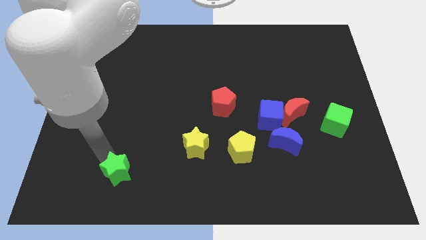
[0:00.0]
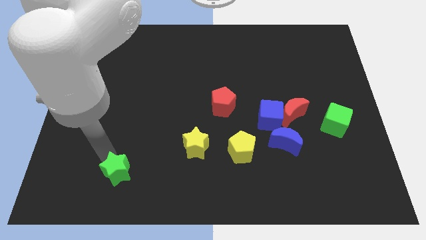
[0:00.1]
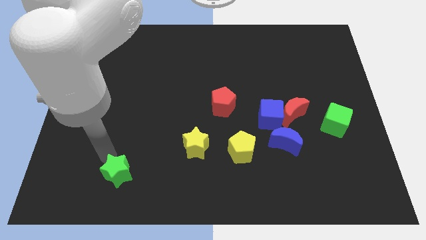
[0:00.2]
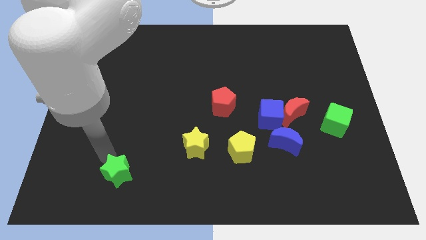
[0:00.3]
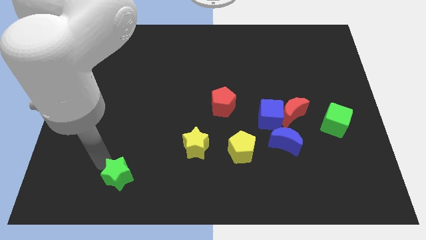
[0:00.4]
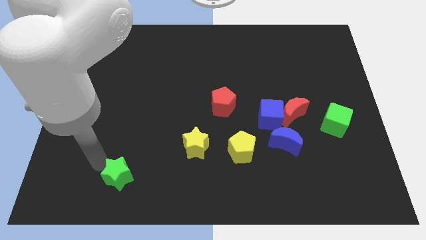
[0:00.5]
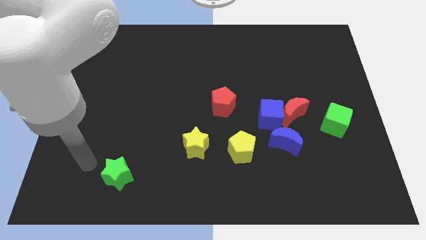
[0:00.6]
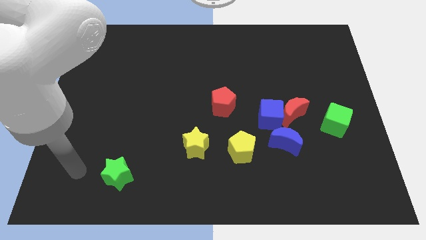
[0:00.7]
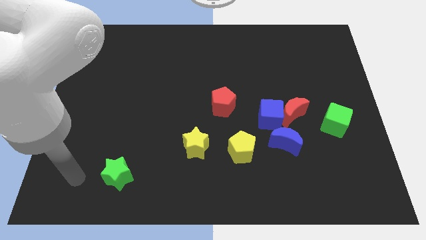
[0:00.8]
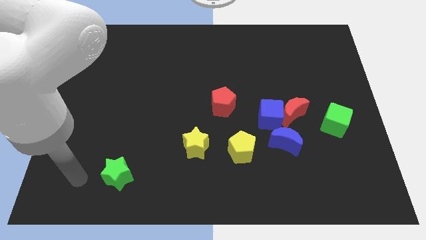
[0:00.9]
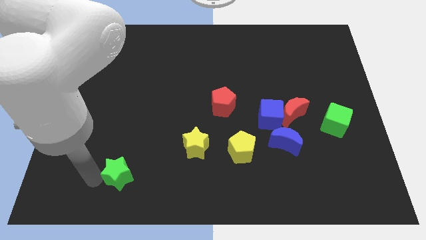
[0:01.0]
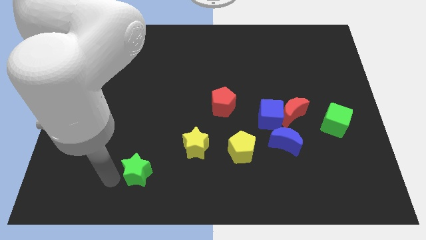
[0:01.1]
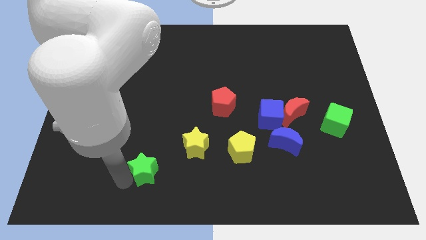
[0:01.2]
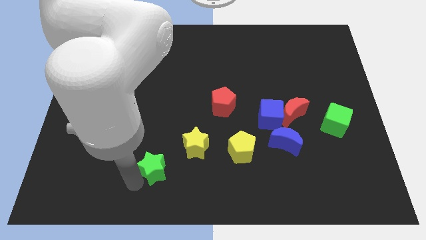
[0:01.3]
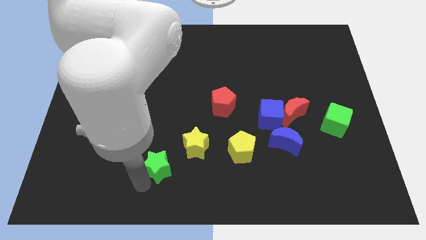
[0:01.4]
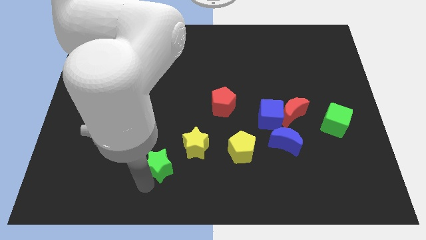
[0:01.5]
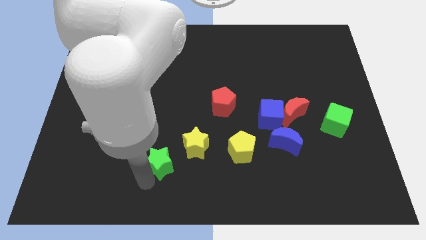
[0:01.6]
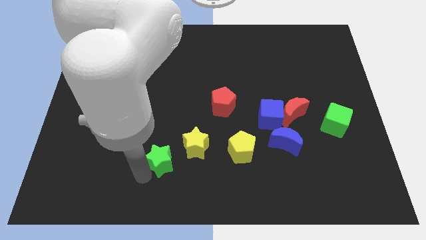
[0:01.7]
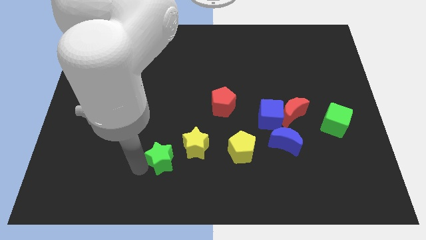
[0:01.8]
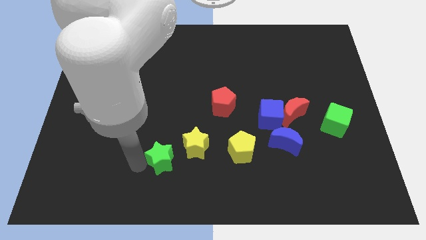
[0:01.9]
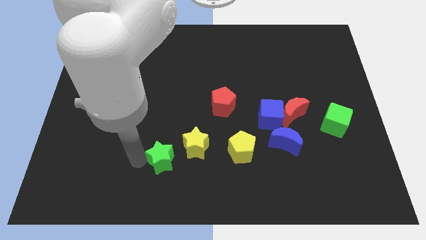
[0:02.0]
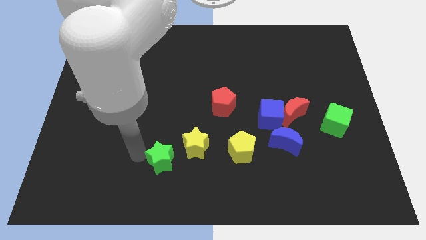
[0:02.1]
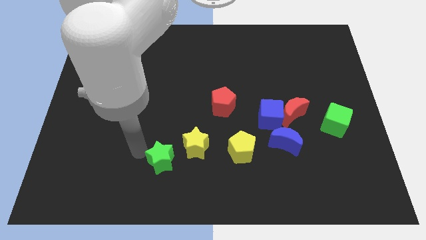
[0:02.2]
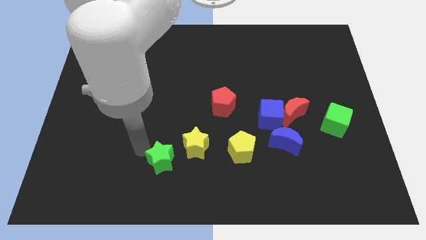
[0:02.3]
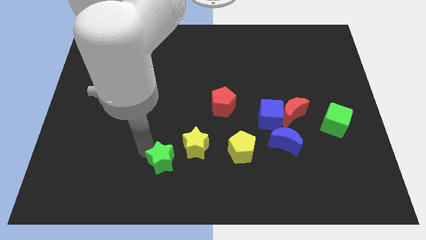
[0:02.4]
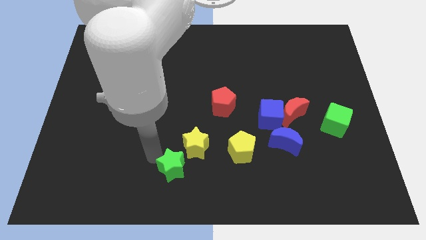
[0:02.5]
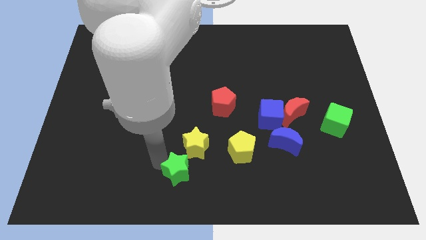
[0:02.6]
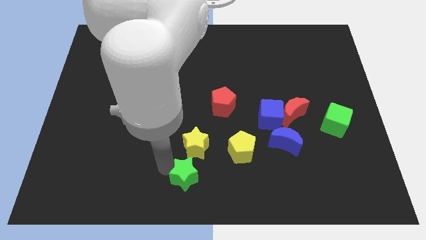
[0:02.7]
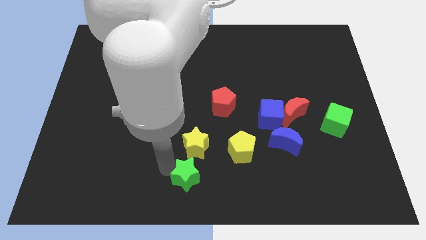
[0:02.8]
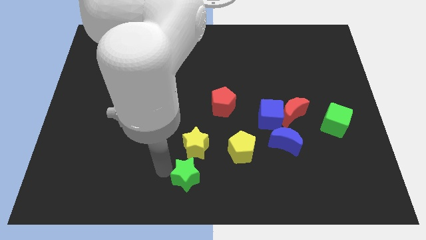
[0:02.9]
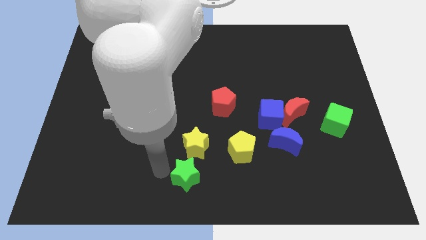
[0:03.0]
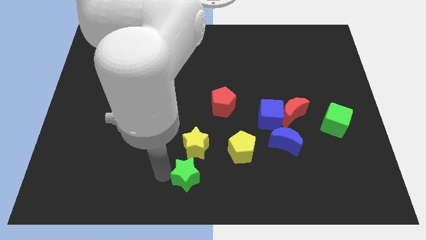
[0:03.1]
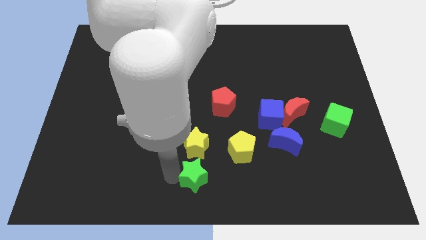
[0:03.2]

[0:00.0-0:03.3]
move the green star down to the yellow star

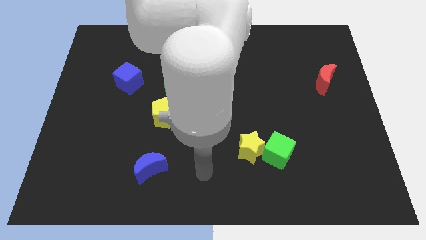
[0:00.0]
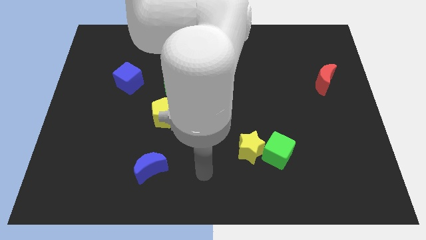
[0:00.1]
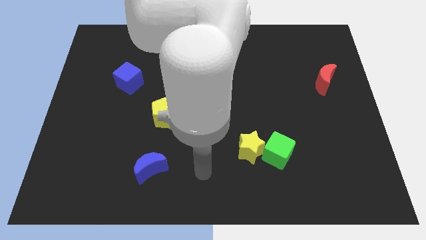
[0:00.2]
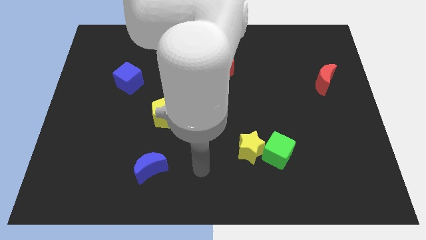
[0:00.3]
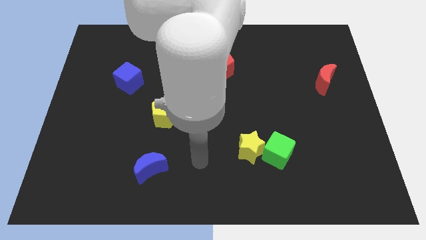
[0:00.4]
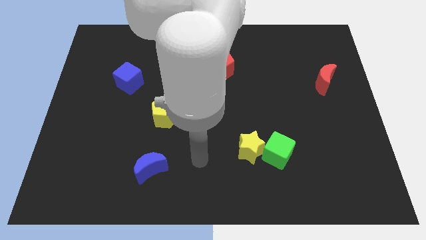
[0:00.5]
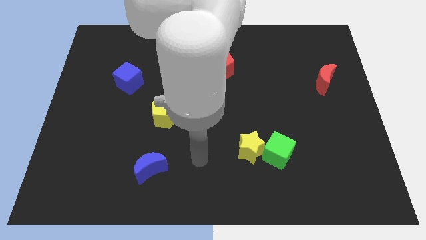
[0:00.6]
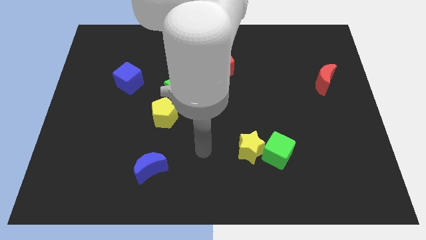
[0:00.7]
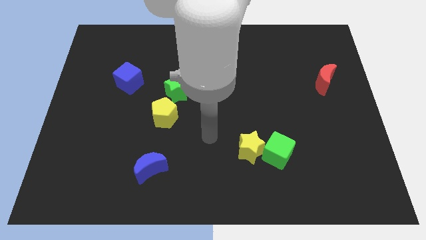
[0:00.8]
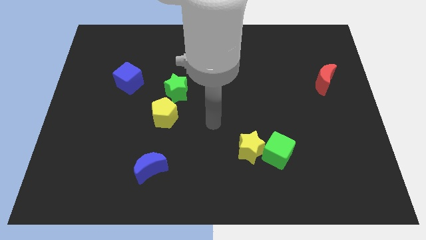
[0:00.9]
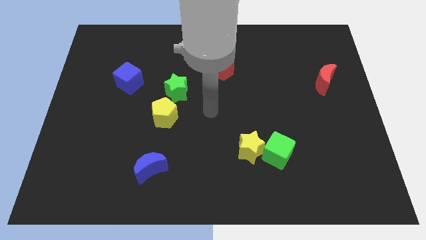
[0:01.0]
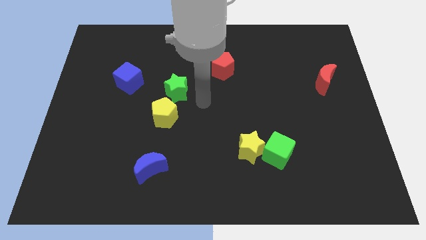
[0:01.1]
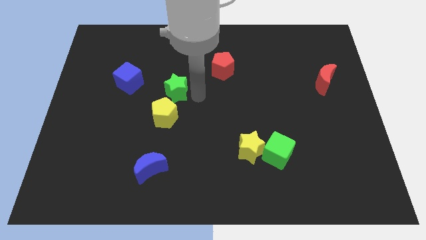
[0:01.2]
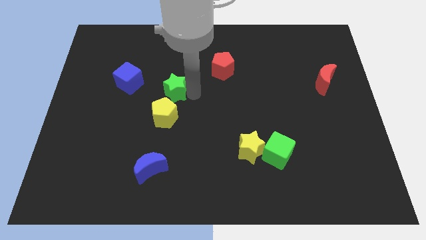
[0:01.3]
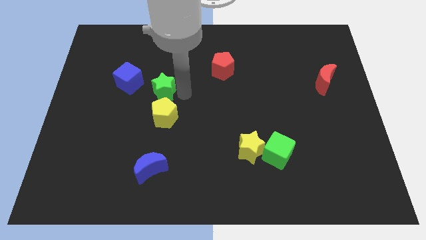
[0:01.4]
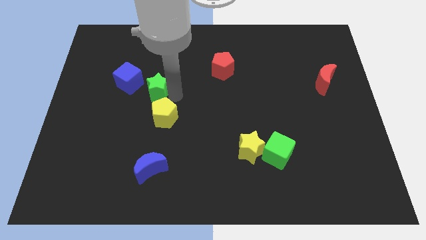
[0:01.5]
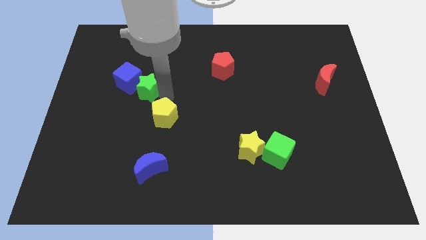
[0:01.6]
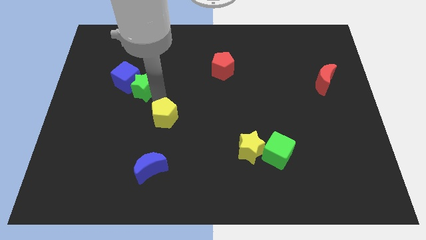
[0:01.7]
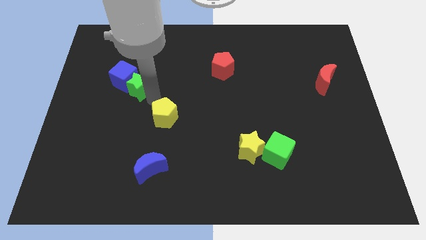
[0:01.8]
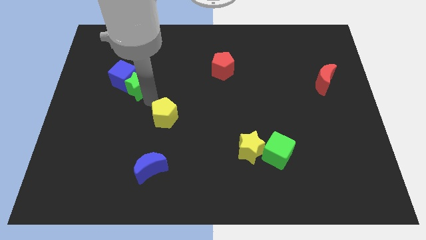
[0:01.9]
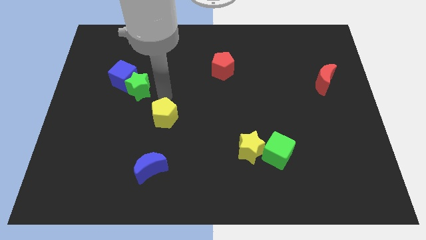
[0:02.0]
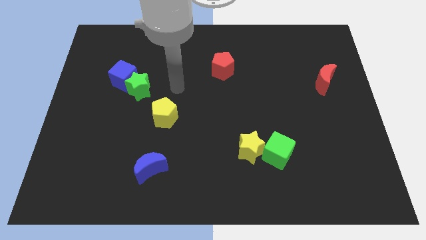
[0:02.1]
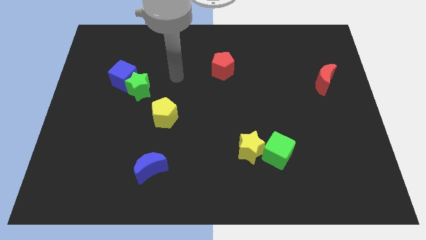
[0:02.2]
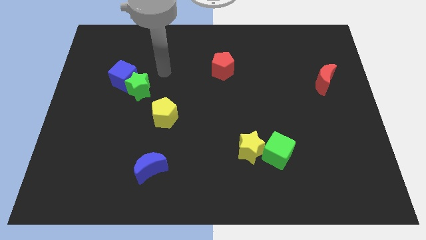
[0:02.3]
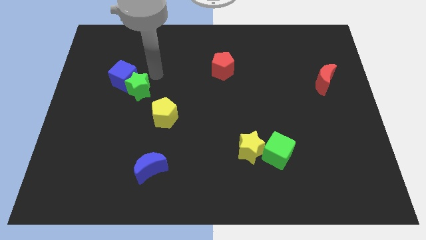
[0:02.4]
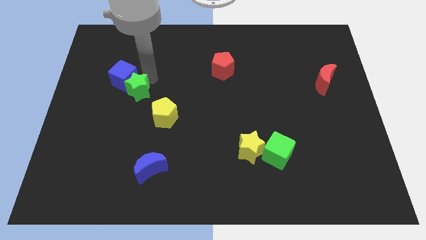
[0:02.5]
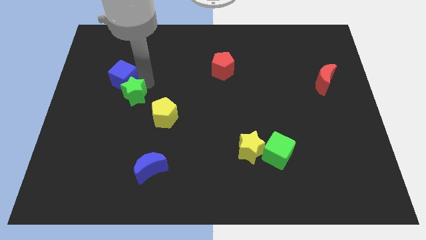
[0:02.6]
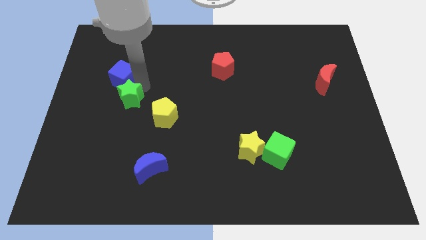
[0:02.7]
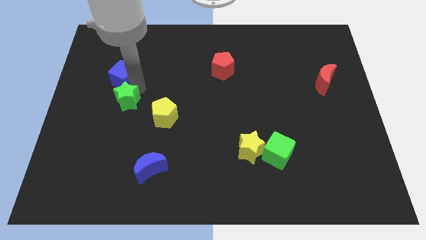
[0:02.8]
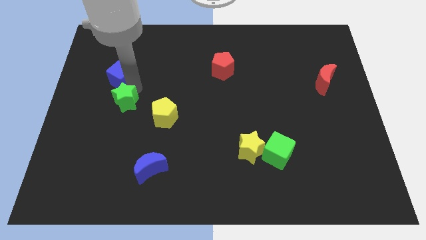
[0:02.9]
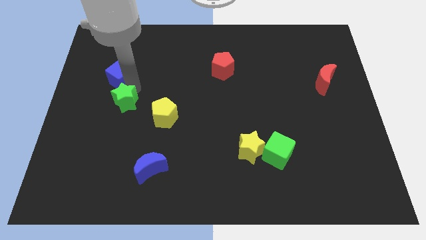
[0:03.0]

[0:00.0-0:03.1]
push the green star towards center left

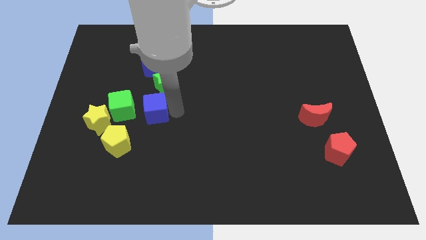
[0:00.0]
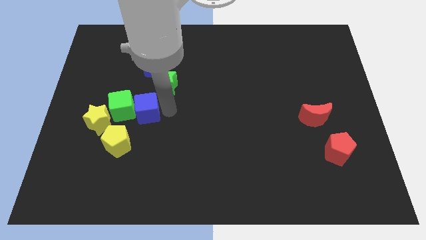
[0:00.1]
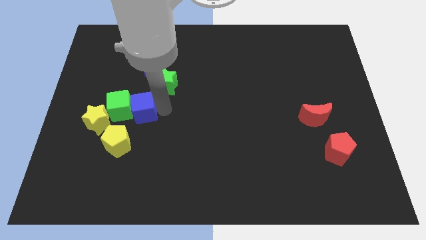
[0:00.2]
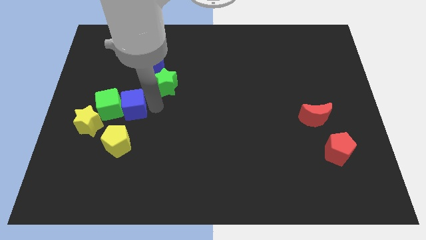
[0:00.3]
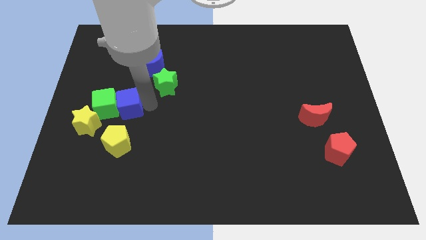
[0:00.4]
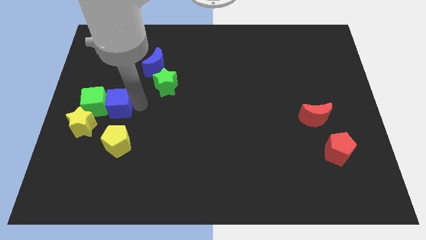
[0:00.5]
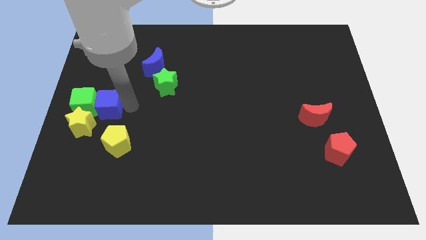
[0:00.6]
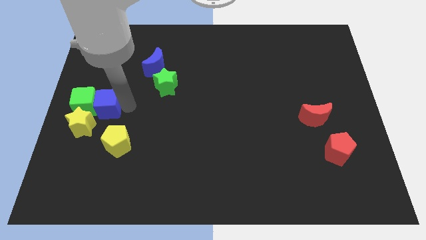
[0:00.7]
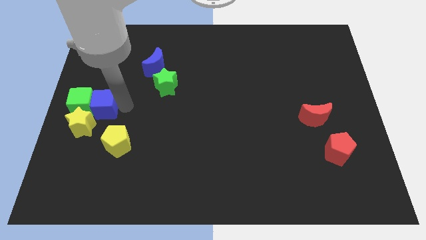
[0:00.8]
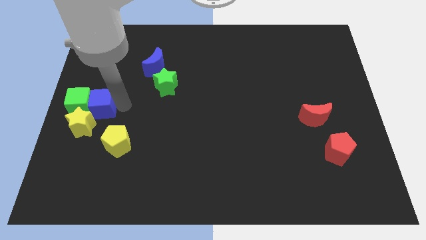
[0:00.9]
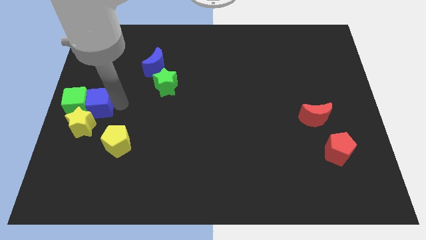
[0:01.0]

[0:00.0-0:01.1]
move blue cube and green cube towards left center of the board

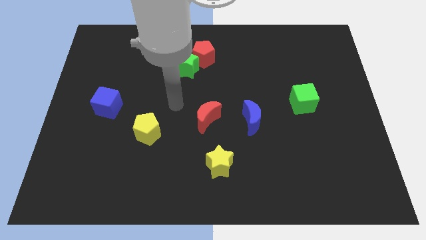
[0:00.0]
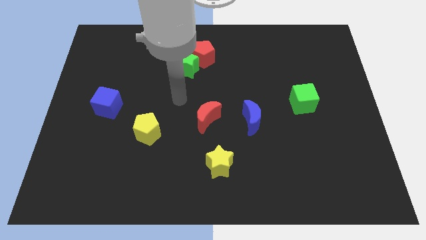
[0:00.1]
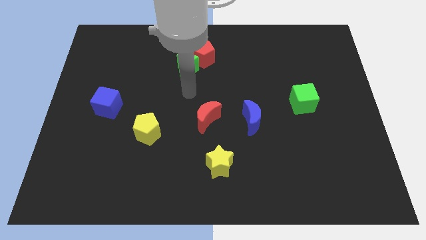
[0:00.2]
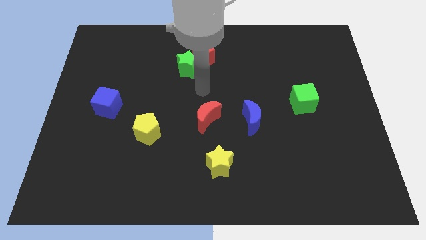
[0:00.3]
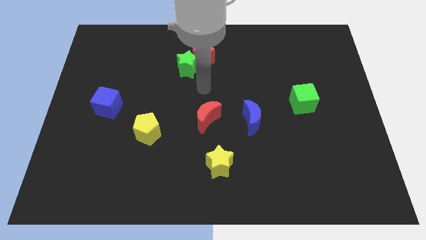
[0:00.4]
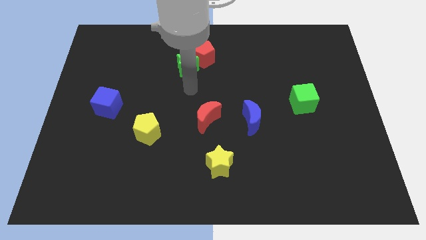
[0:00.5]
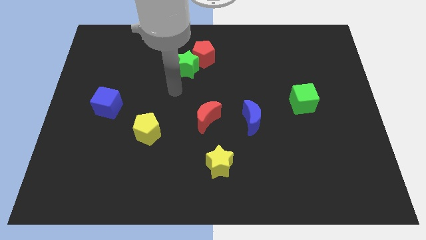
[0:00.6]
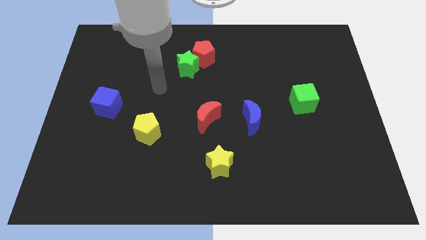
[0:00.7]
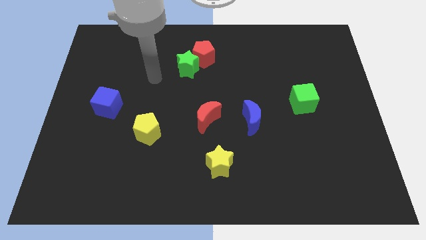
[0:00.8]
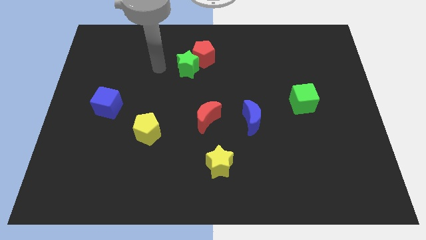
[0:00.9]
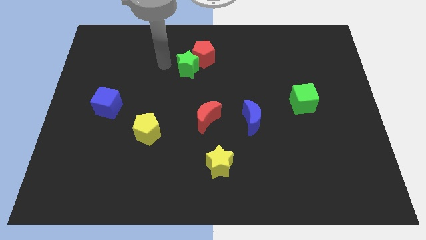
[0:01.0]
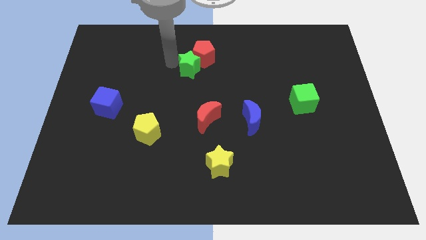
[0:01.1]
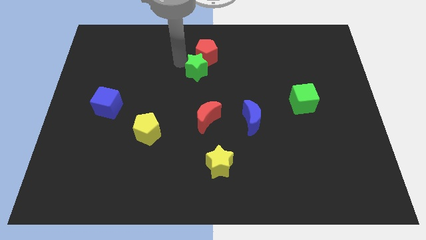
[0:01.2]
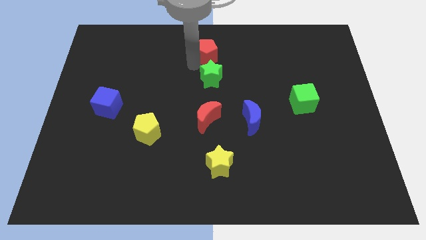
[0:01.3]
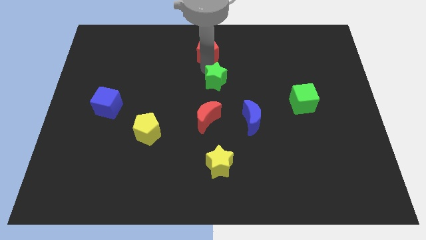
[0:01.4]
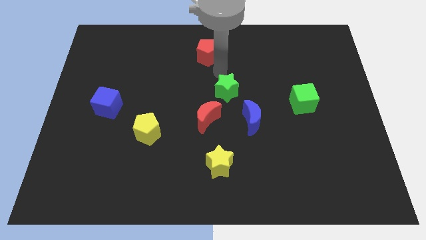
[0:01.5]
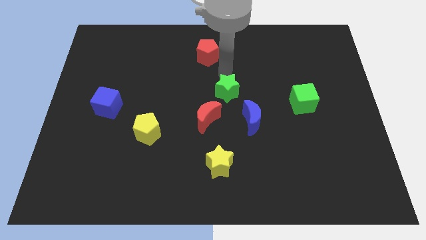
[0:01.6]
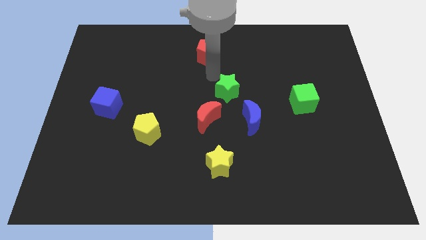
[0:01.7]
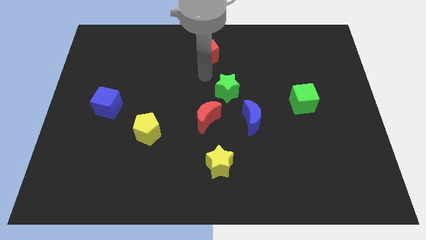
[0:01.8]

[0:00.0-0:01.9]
separate the green star away from the red pentagon
